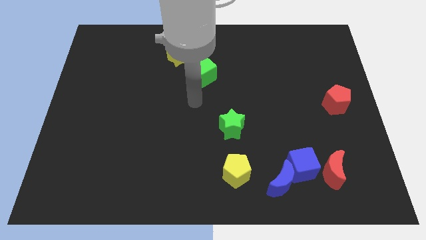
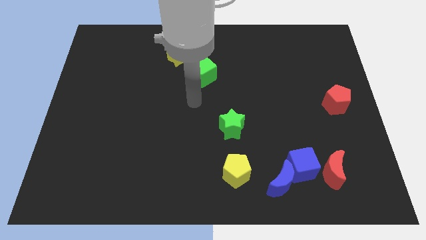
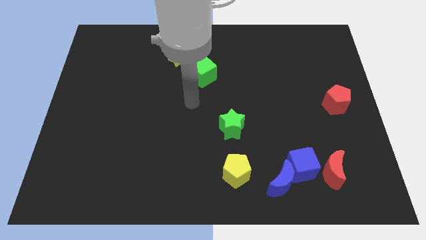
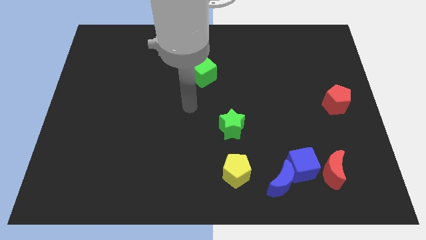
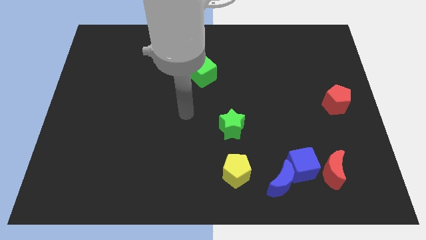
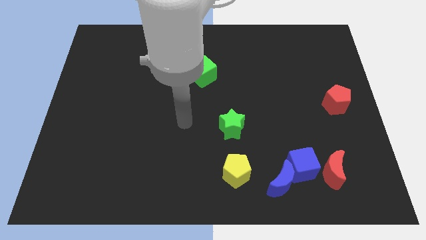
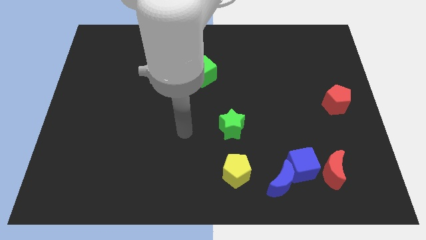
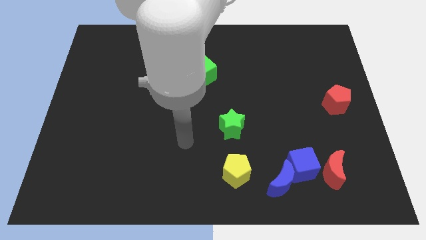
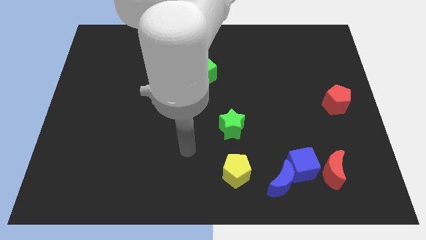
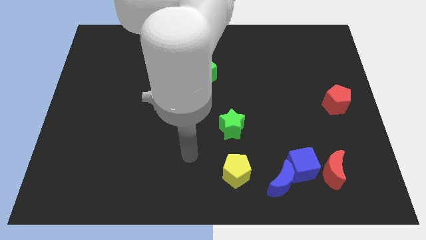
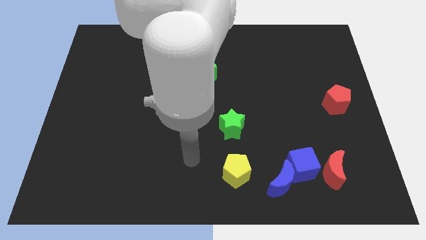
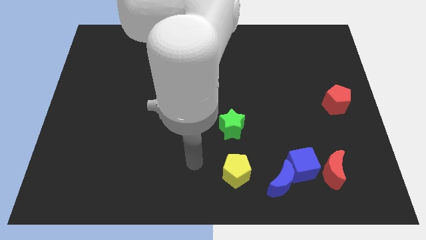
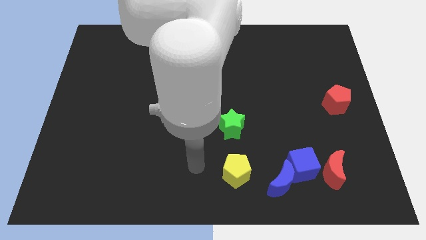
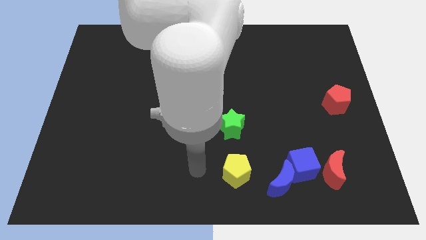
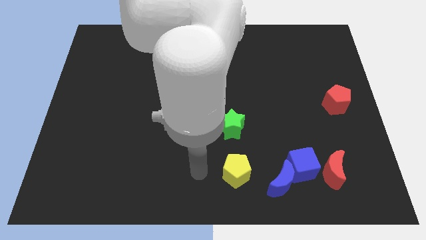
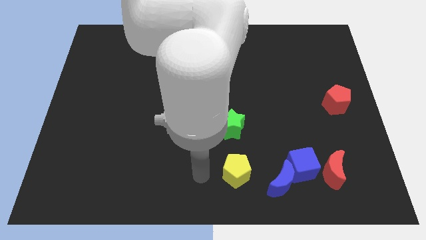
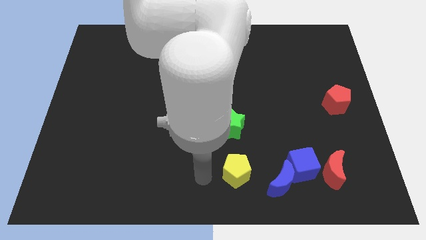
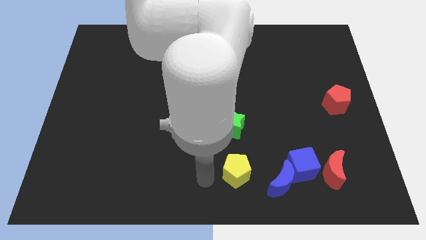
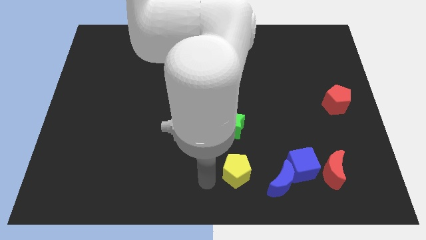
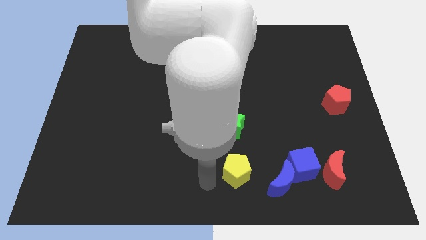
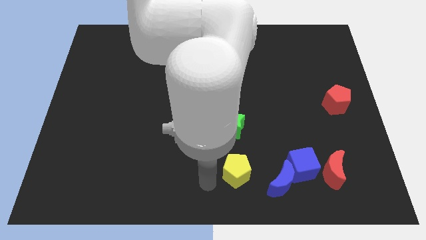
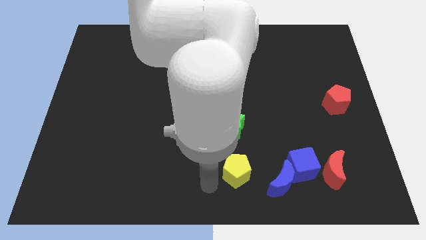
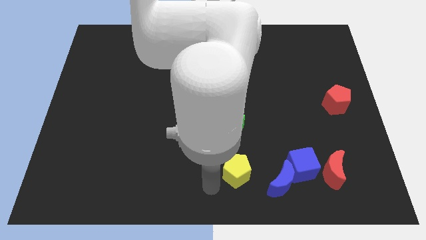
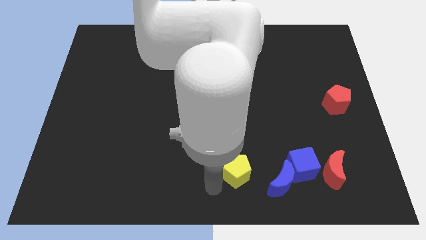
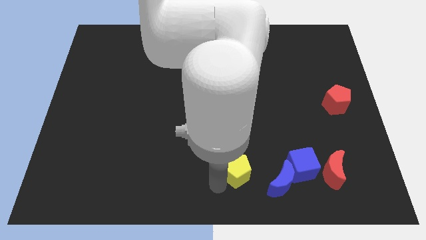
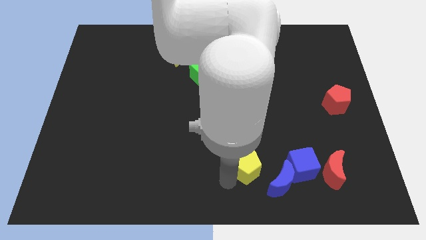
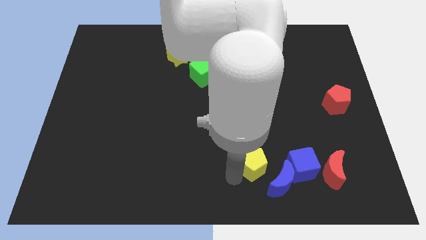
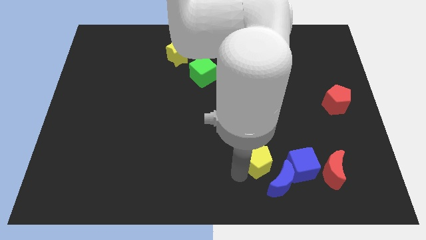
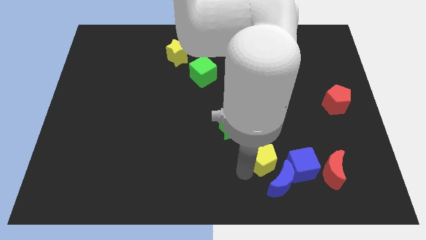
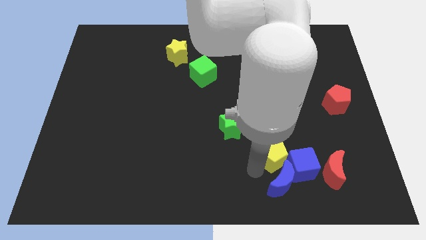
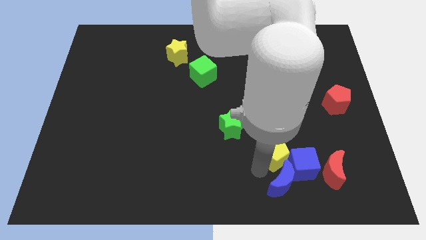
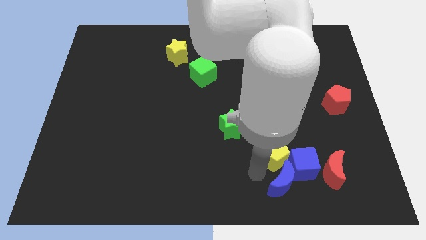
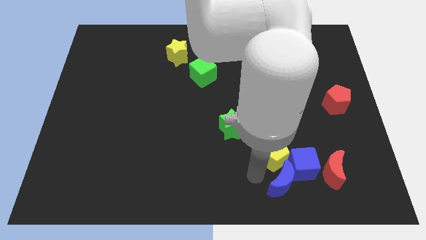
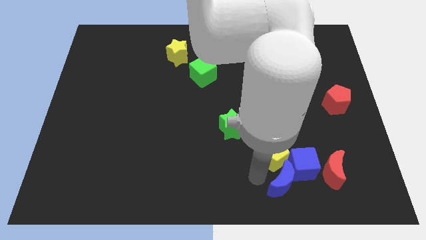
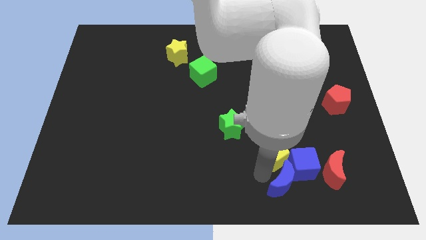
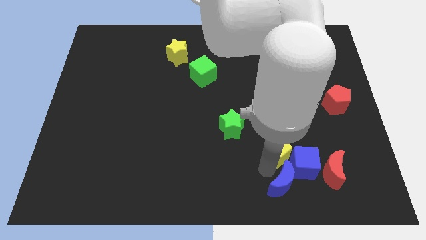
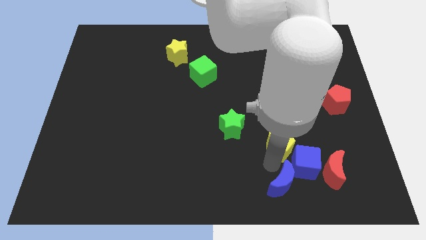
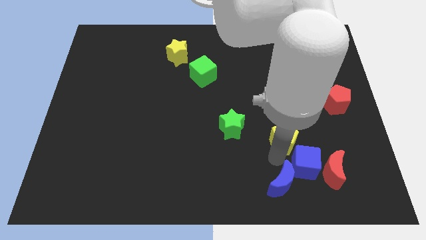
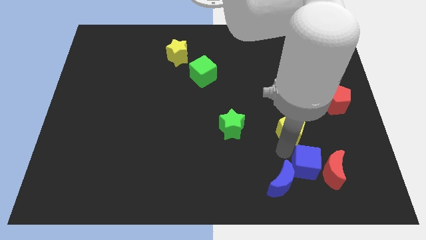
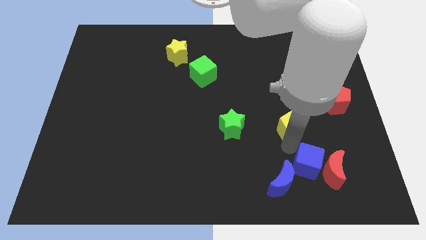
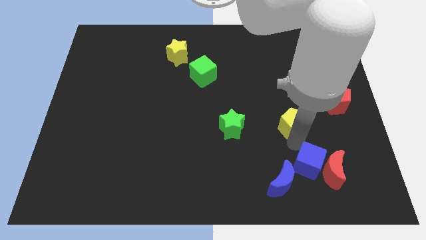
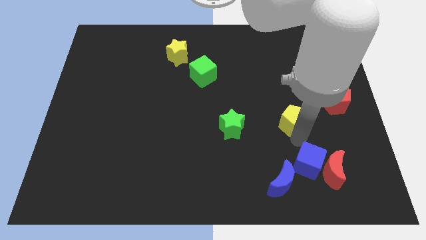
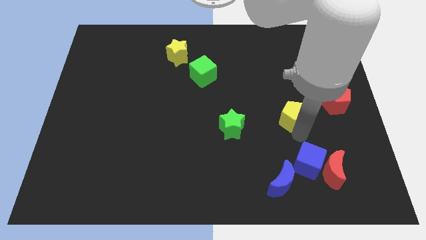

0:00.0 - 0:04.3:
place the yellow pentagon above the blue cube

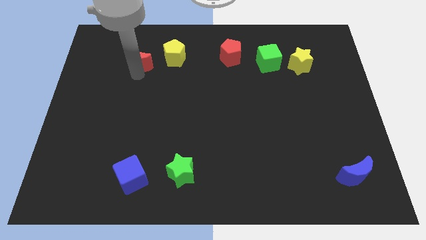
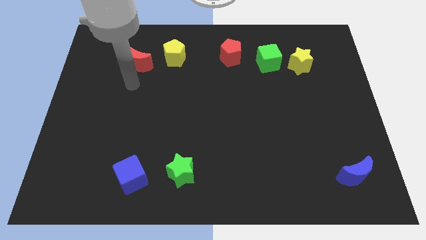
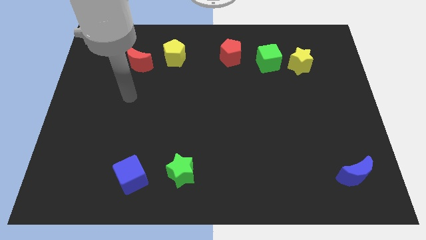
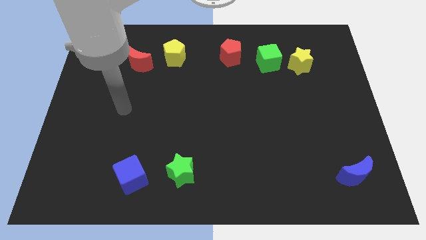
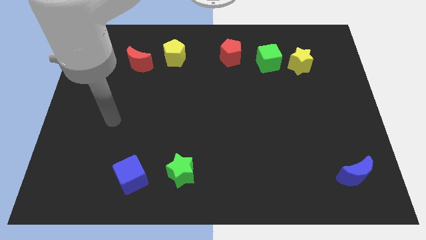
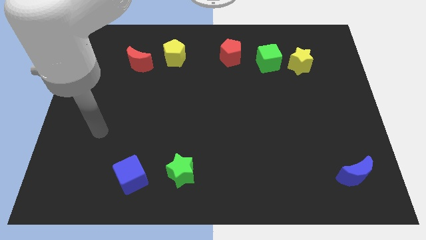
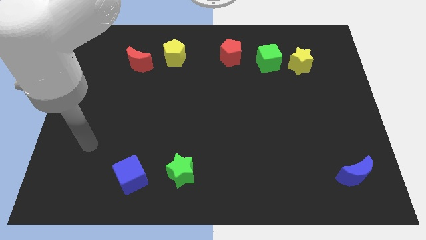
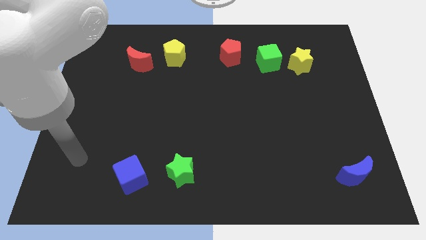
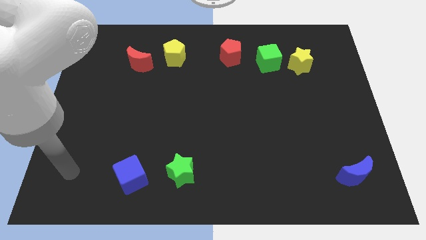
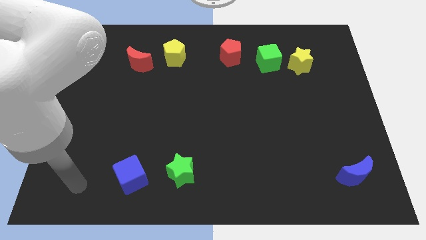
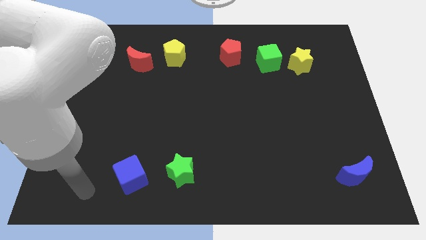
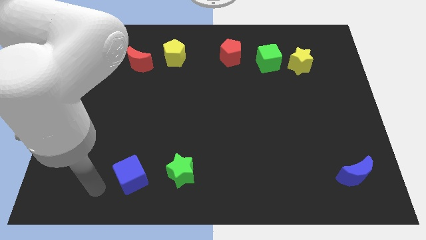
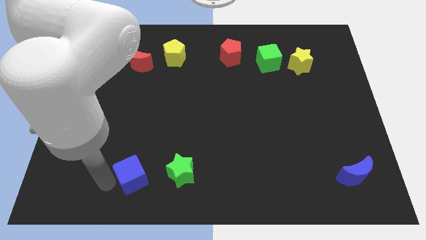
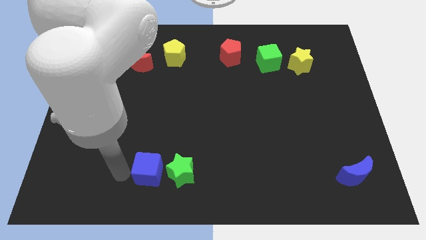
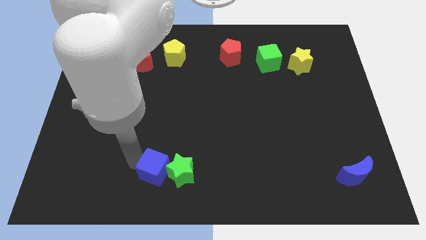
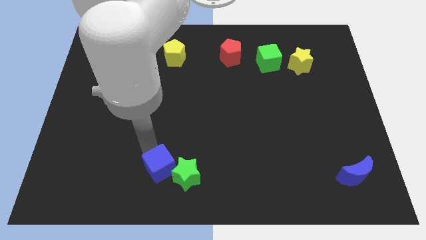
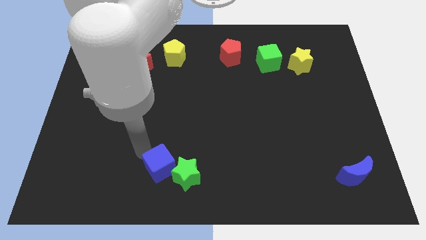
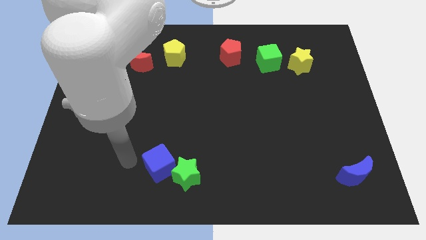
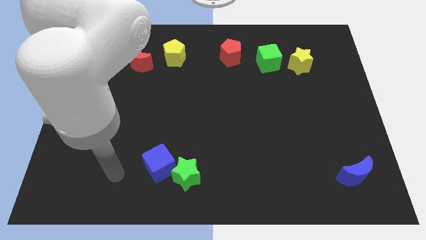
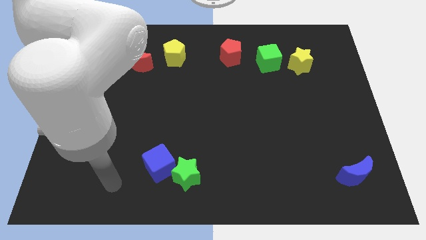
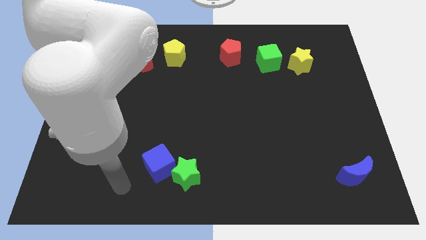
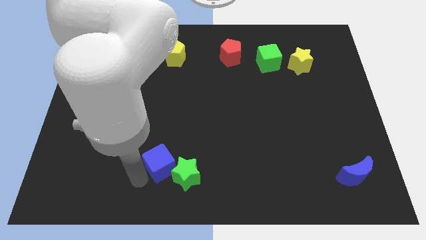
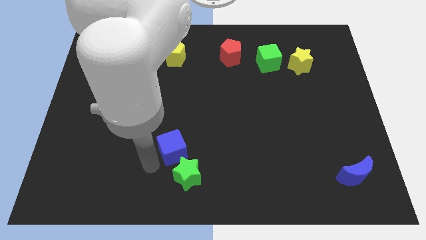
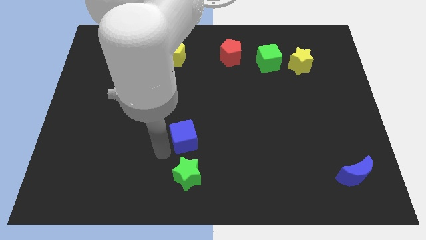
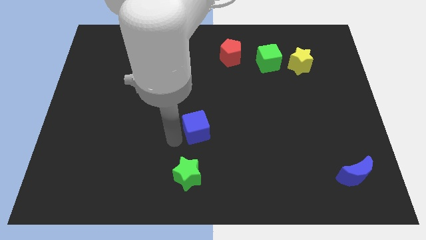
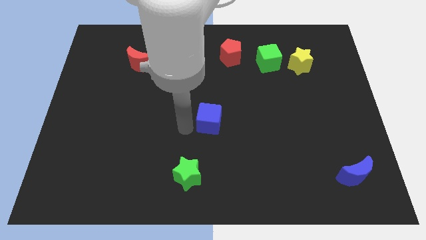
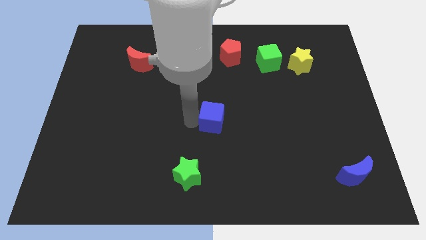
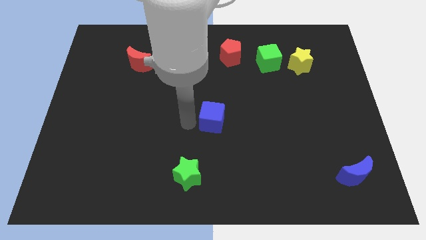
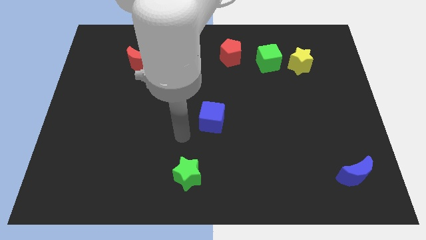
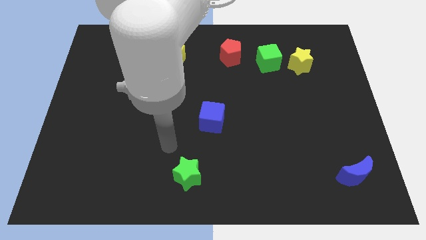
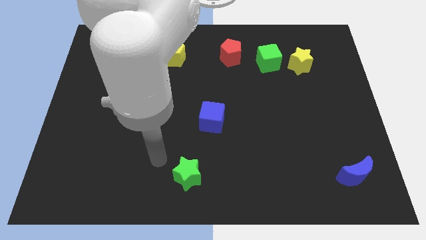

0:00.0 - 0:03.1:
move the blue cube between the red pentagon and green star

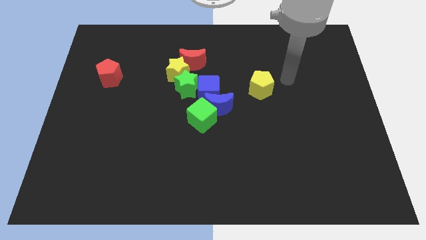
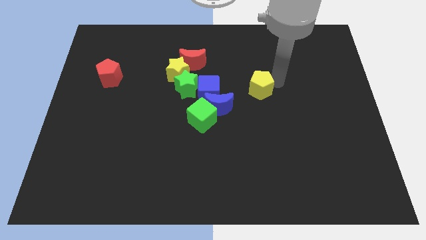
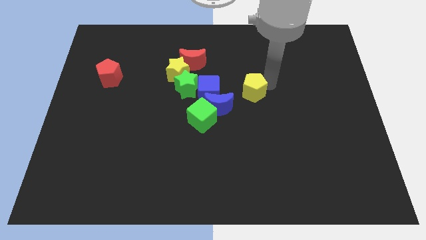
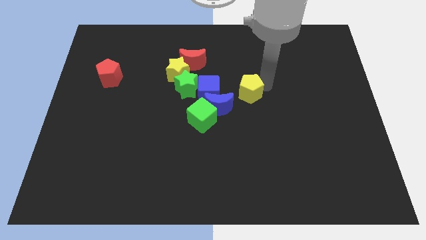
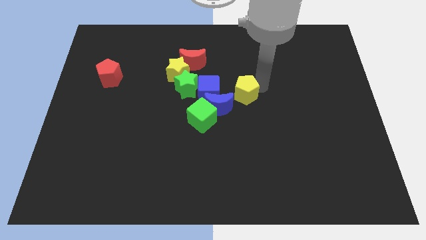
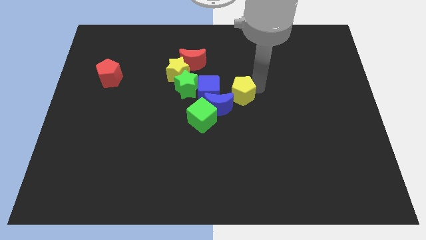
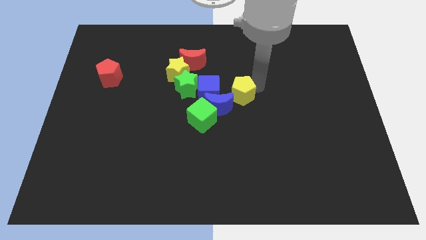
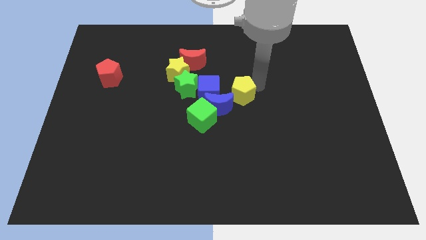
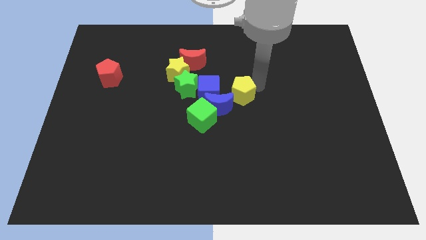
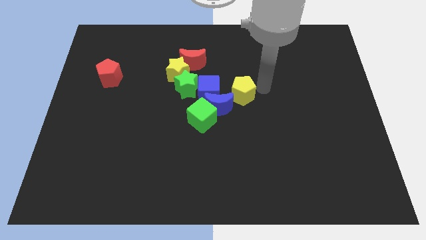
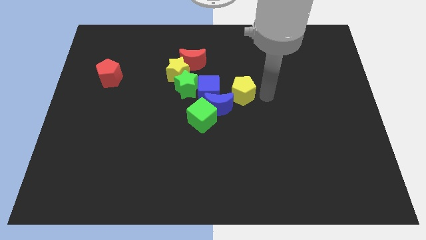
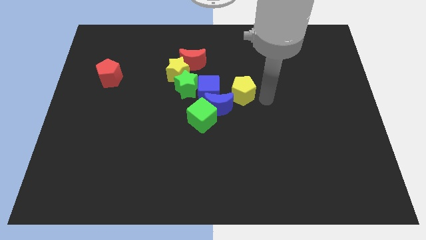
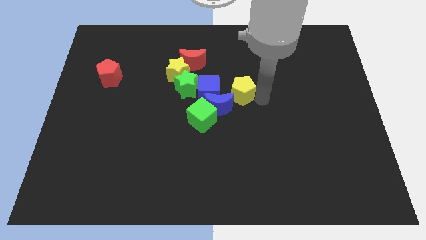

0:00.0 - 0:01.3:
slide the yellow pentagon to the top right of the blue moon

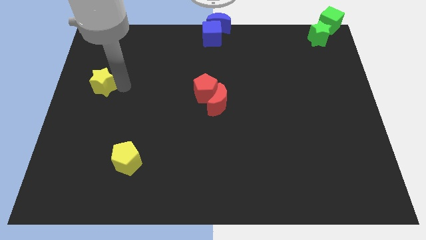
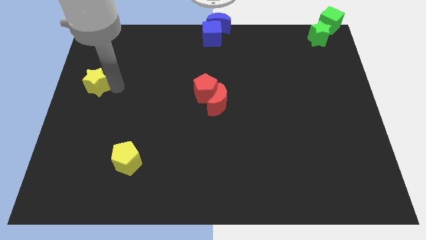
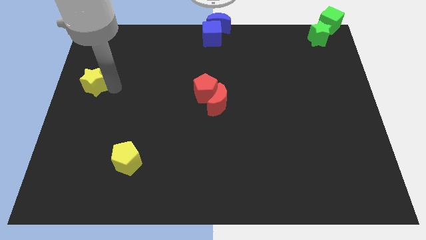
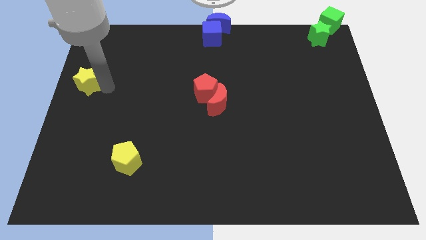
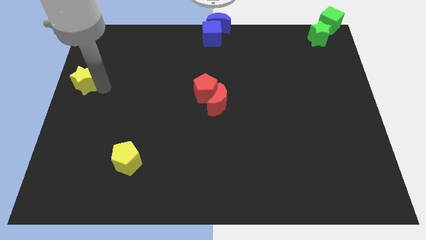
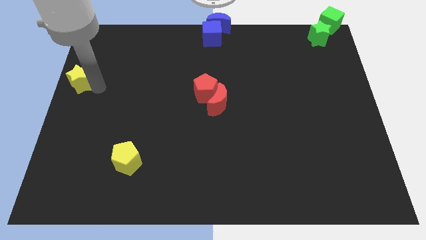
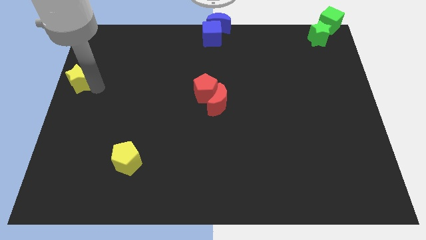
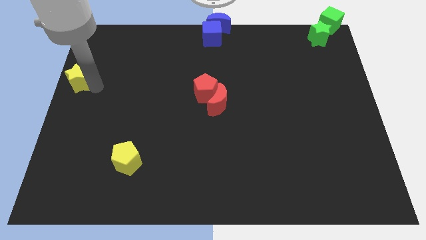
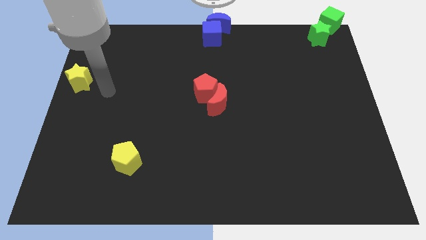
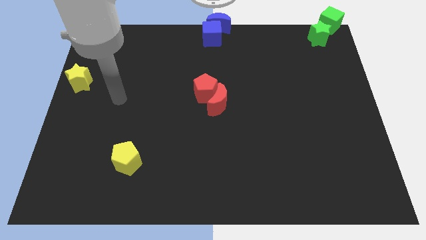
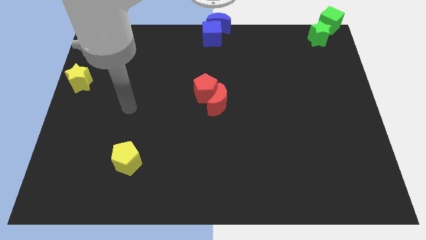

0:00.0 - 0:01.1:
push the yellow star towards the left side of the board
